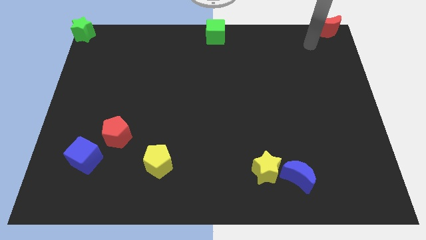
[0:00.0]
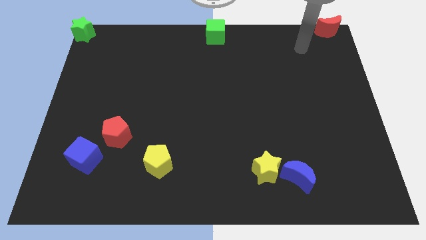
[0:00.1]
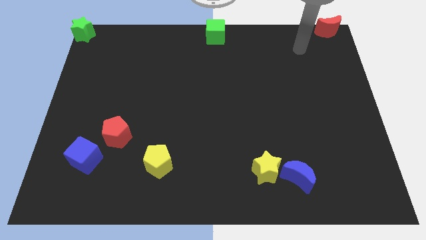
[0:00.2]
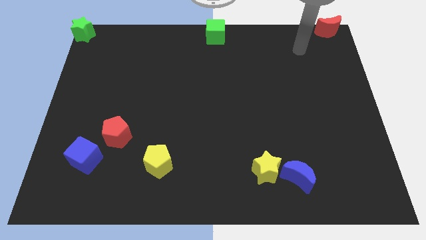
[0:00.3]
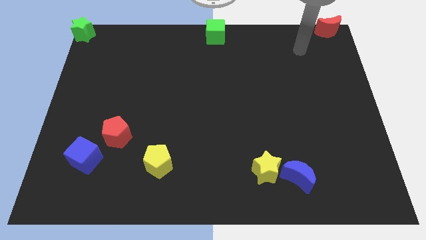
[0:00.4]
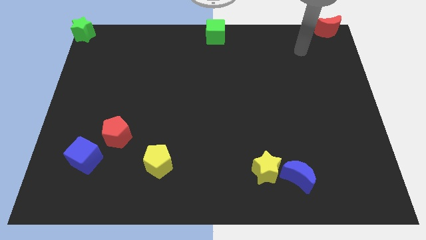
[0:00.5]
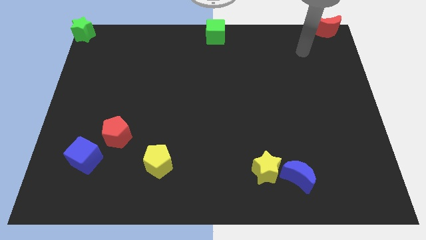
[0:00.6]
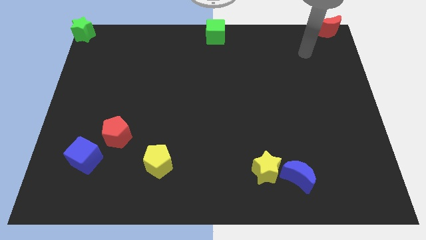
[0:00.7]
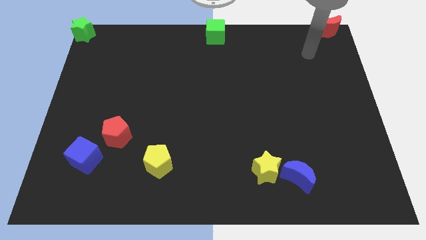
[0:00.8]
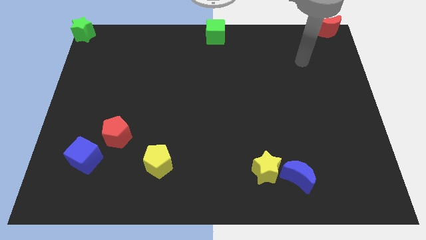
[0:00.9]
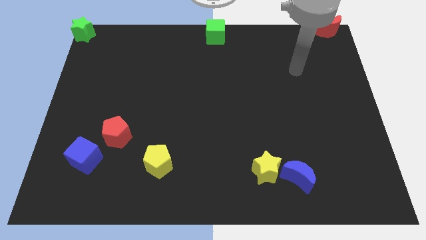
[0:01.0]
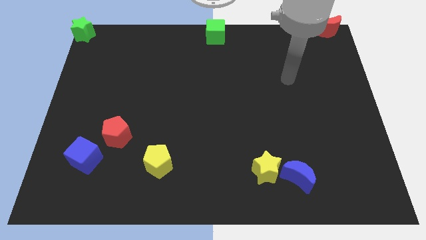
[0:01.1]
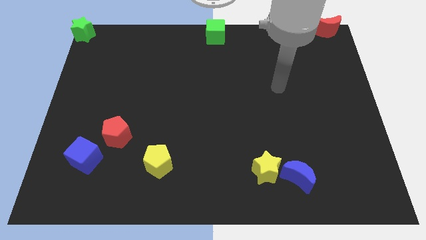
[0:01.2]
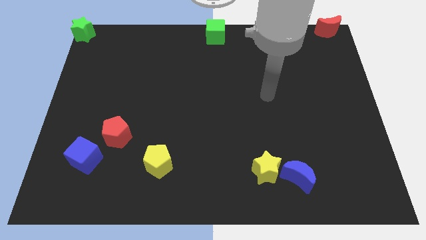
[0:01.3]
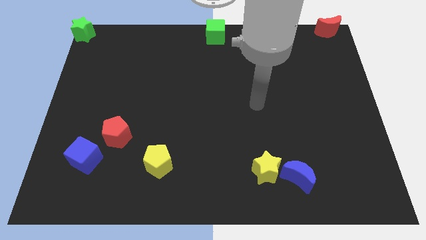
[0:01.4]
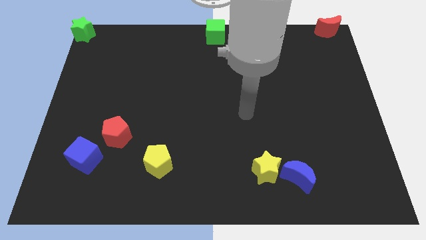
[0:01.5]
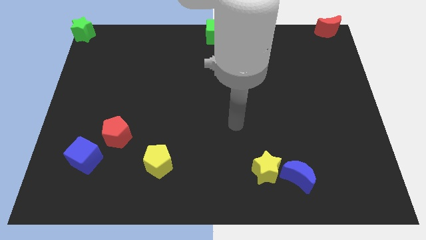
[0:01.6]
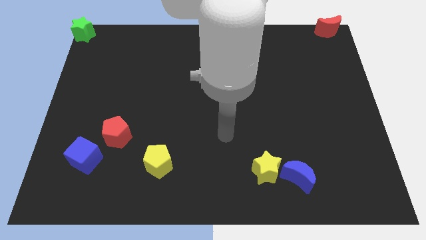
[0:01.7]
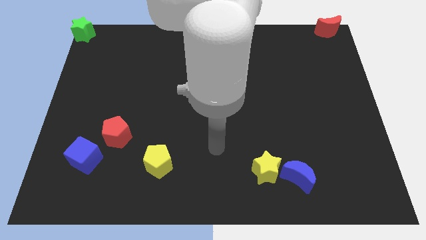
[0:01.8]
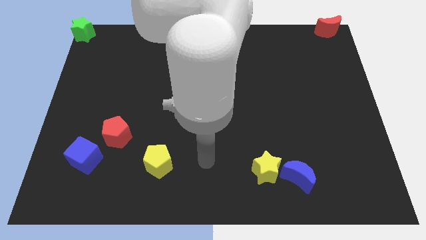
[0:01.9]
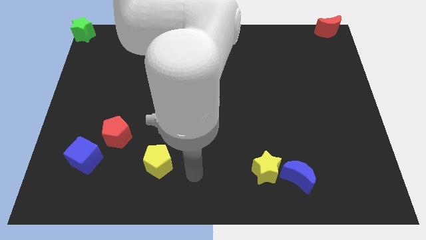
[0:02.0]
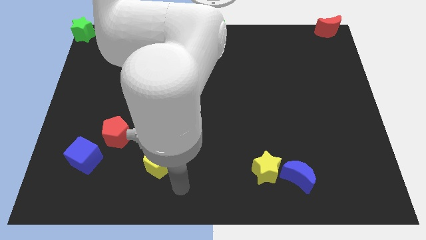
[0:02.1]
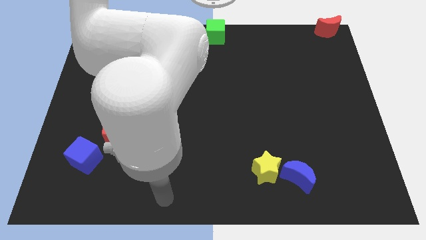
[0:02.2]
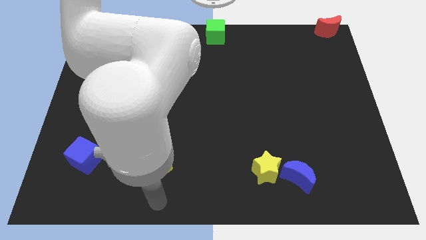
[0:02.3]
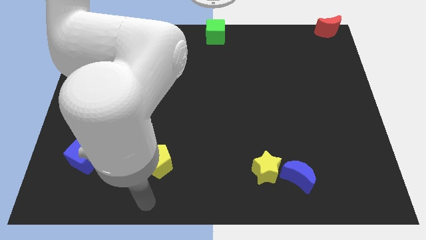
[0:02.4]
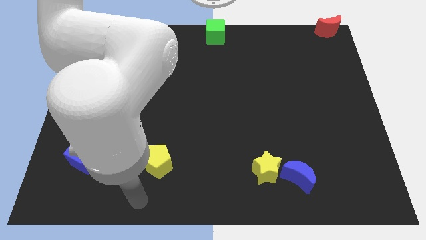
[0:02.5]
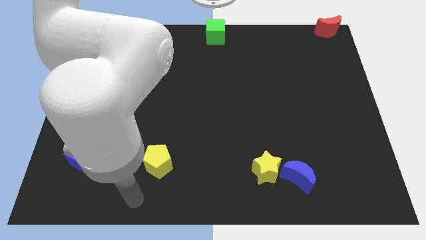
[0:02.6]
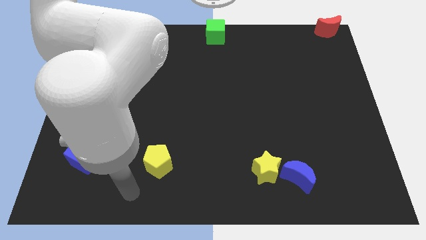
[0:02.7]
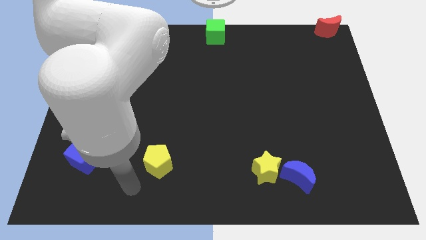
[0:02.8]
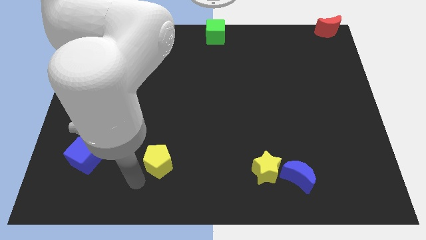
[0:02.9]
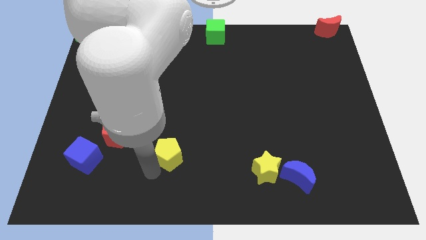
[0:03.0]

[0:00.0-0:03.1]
move your arm to the bottom of yellow pentagon

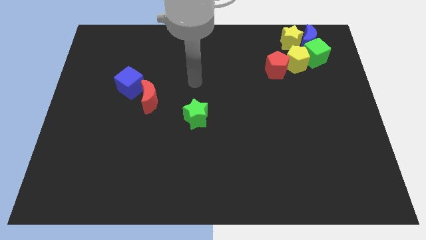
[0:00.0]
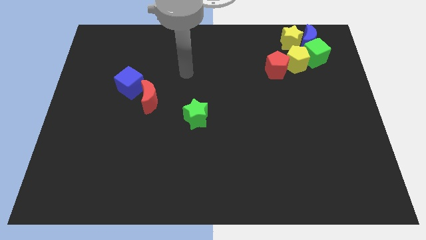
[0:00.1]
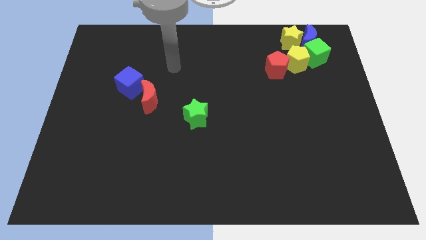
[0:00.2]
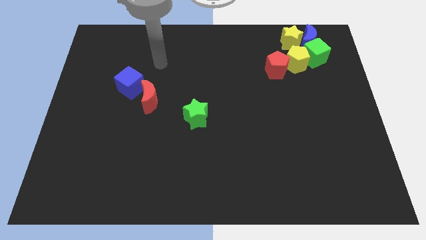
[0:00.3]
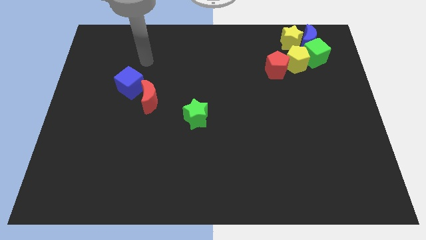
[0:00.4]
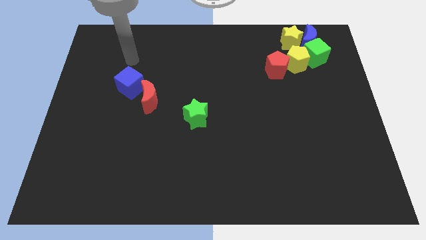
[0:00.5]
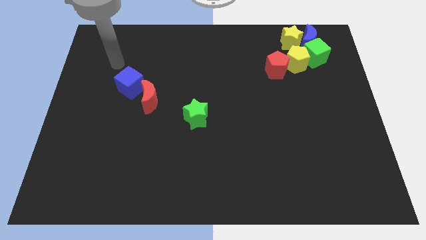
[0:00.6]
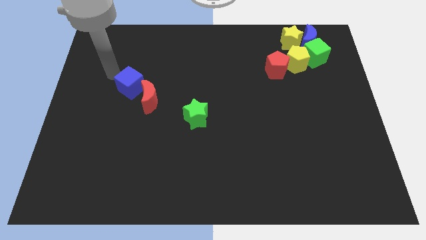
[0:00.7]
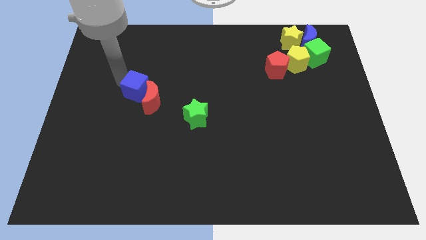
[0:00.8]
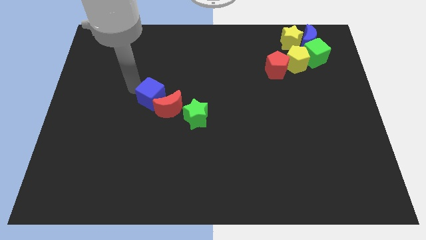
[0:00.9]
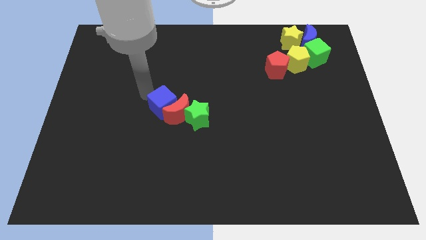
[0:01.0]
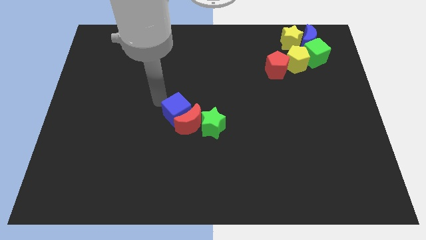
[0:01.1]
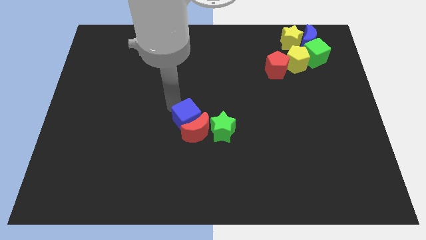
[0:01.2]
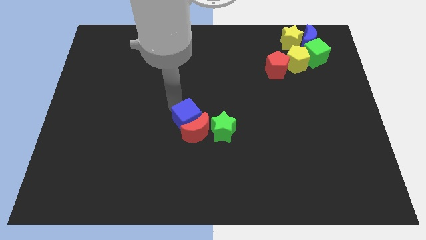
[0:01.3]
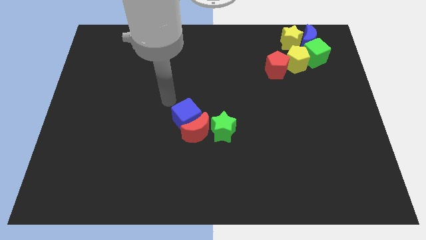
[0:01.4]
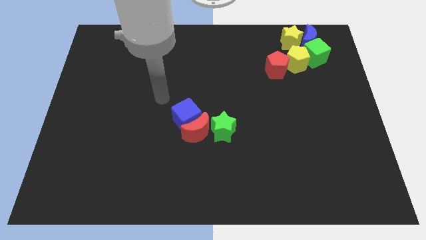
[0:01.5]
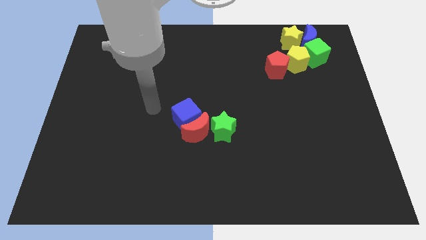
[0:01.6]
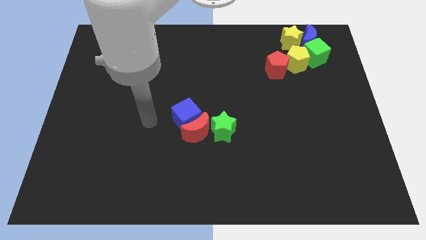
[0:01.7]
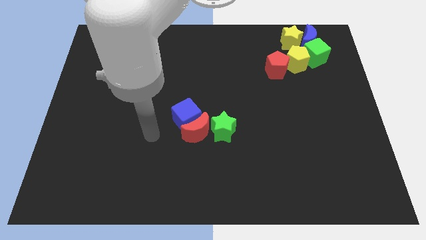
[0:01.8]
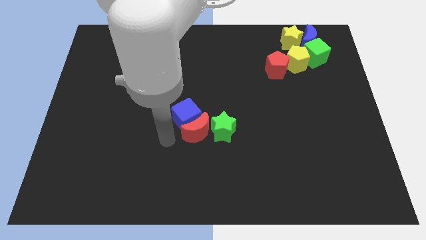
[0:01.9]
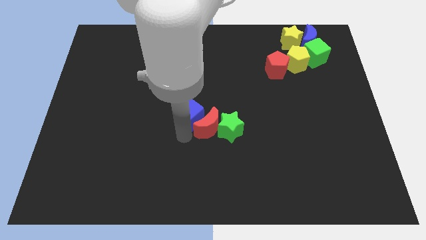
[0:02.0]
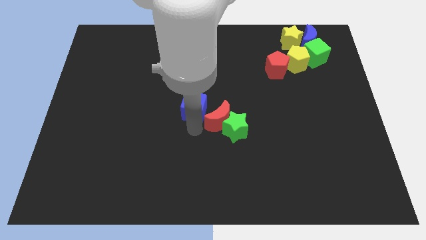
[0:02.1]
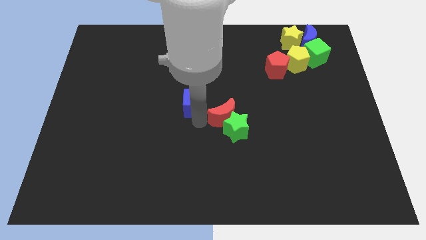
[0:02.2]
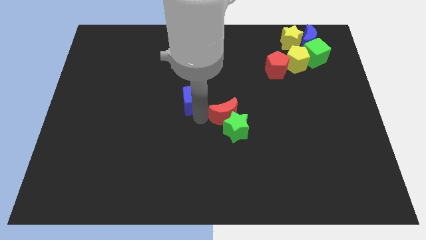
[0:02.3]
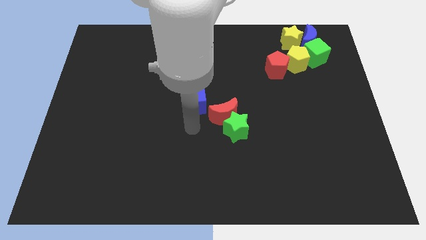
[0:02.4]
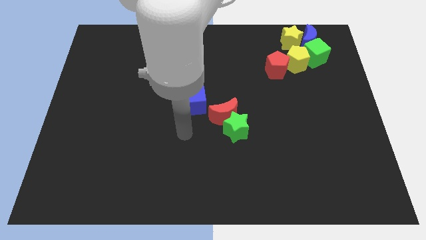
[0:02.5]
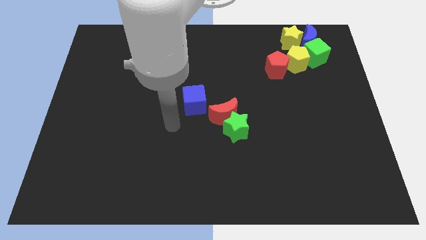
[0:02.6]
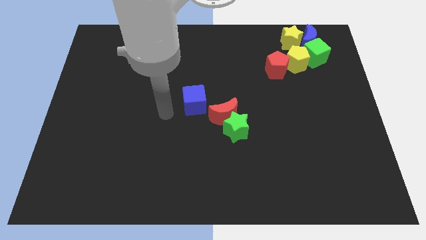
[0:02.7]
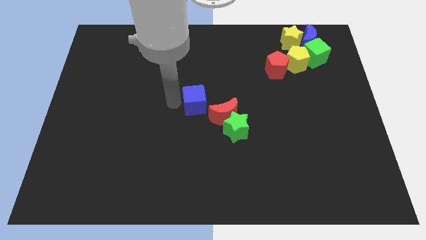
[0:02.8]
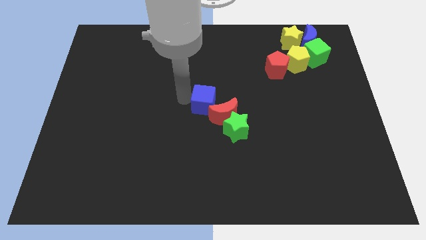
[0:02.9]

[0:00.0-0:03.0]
move the blue cube into the red crescent and green star

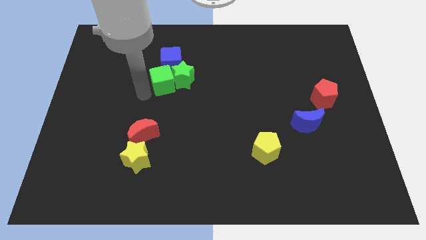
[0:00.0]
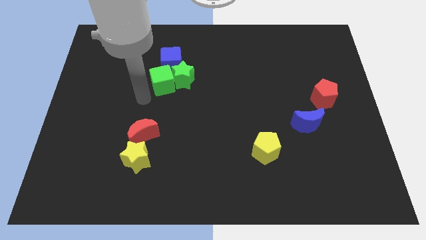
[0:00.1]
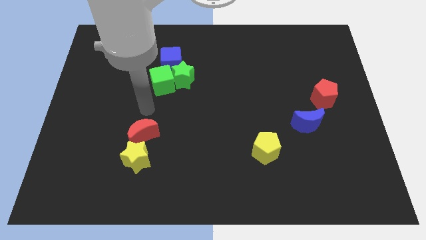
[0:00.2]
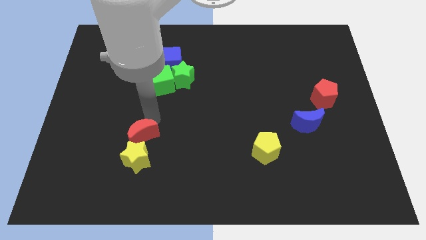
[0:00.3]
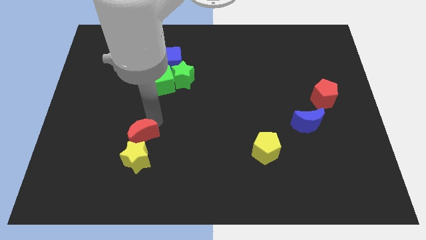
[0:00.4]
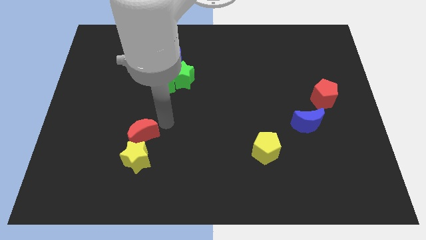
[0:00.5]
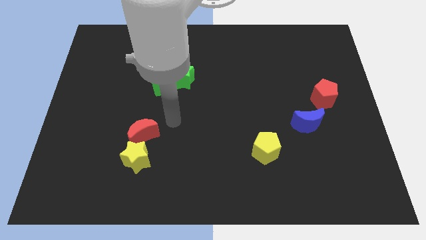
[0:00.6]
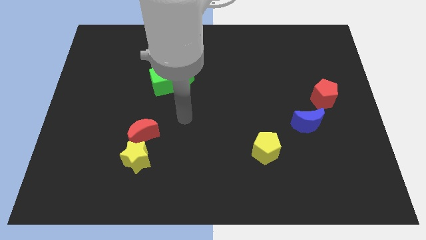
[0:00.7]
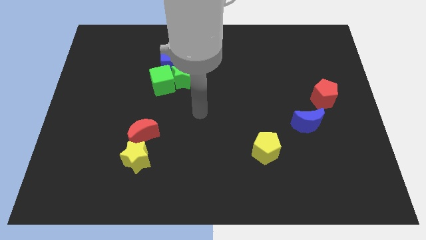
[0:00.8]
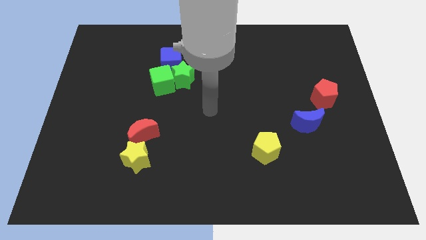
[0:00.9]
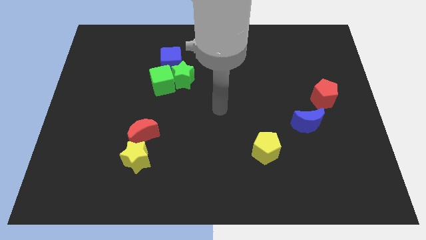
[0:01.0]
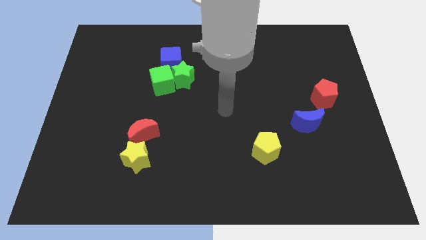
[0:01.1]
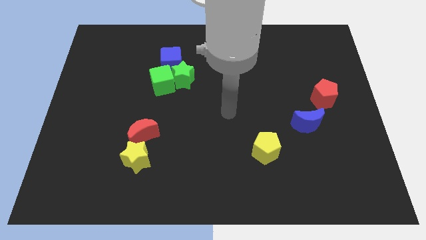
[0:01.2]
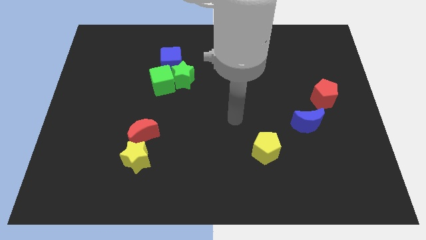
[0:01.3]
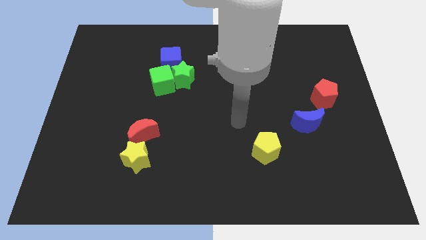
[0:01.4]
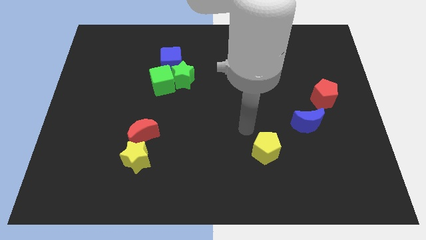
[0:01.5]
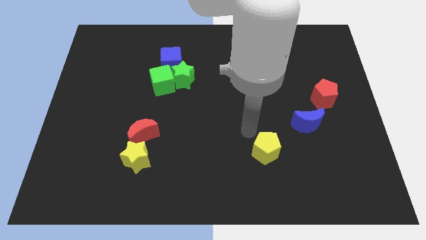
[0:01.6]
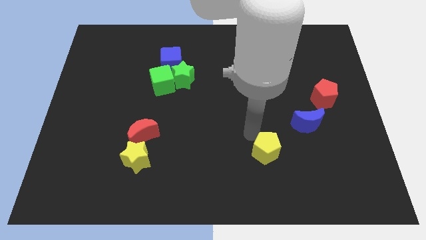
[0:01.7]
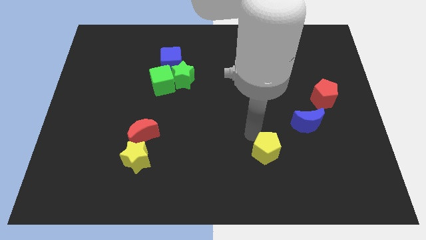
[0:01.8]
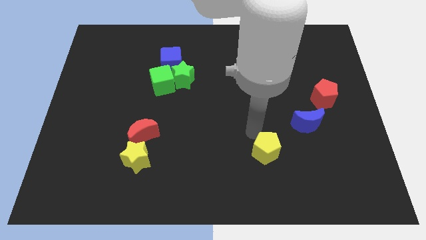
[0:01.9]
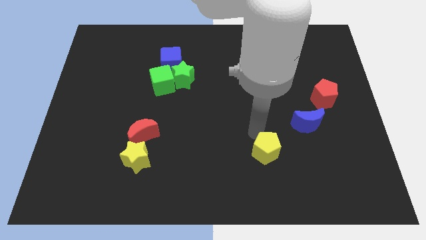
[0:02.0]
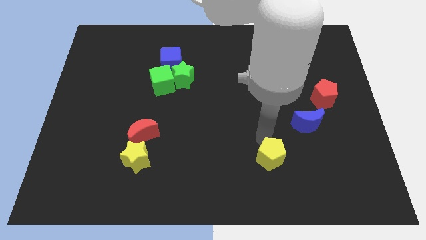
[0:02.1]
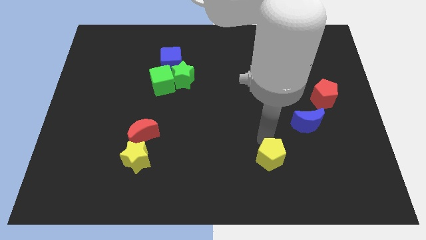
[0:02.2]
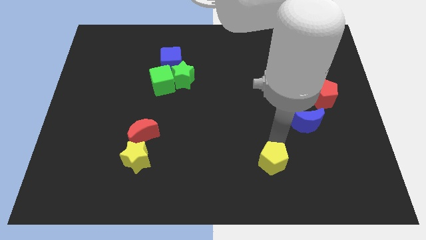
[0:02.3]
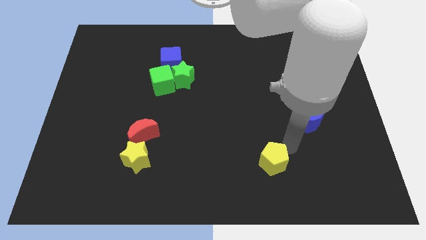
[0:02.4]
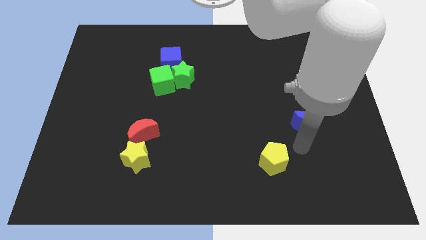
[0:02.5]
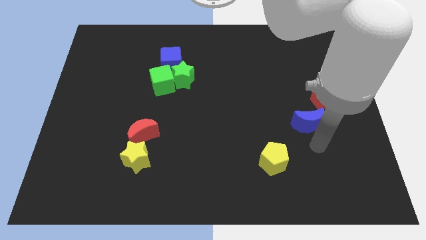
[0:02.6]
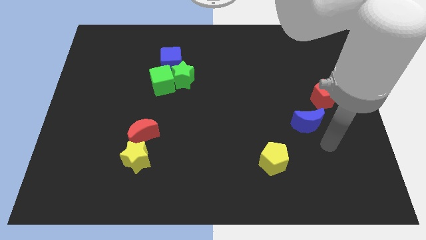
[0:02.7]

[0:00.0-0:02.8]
move the yellow pentagon slightly downwards on the board

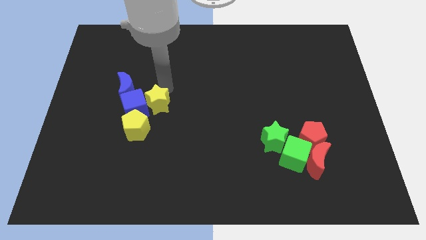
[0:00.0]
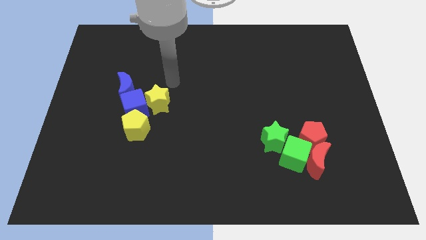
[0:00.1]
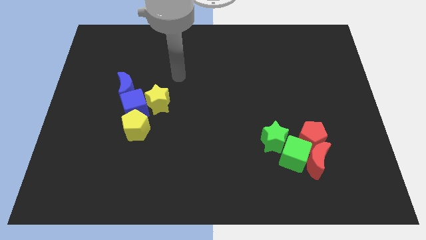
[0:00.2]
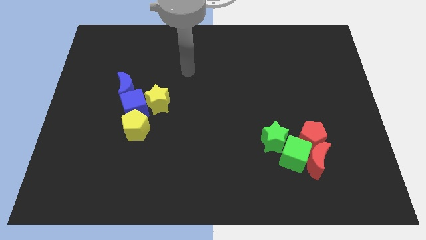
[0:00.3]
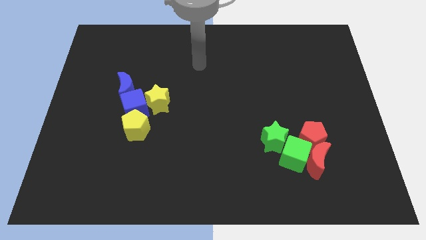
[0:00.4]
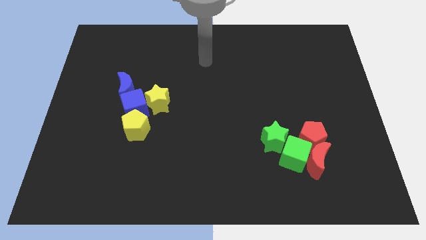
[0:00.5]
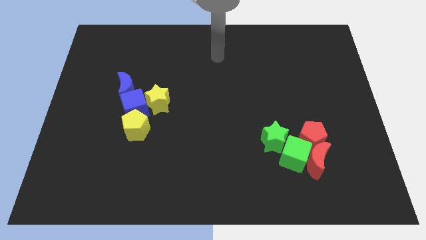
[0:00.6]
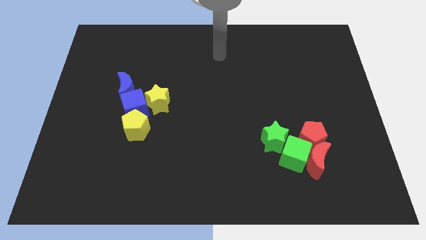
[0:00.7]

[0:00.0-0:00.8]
move the arm towards the top middle
